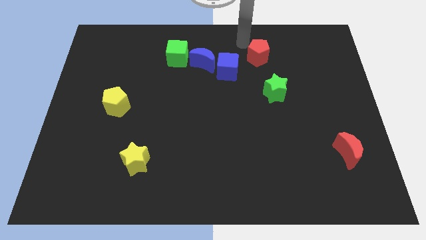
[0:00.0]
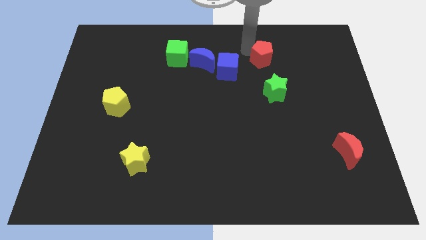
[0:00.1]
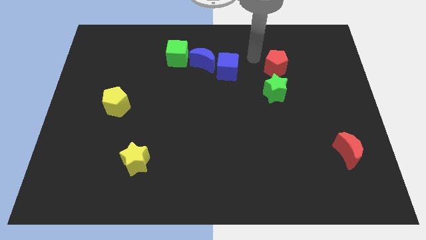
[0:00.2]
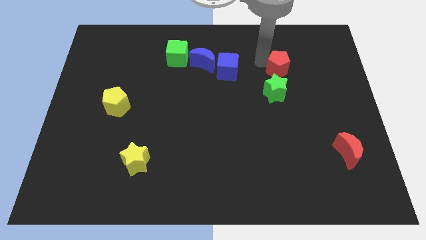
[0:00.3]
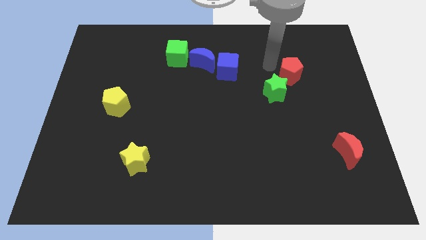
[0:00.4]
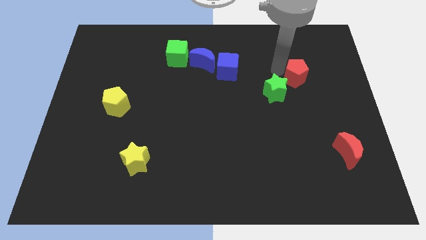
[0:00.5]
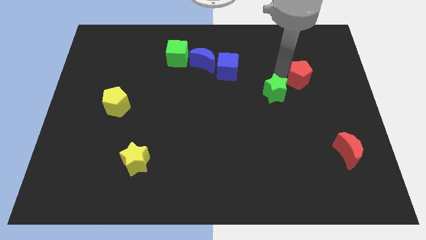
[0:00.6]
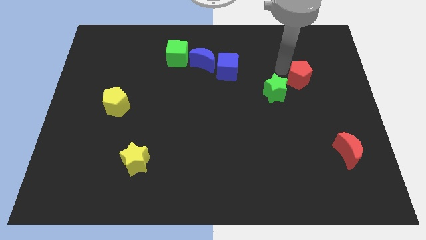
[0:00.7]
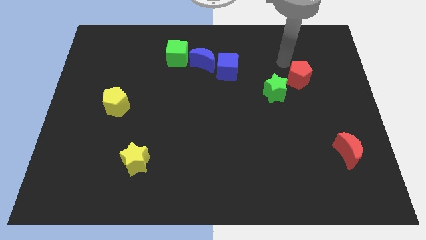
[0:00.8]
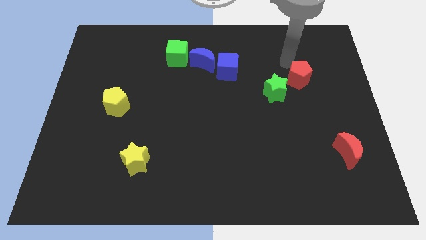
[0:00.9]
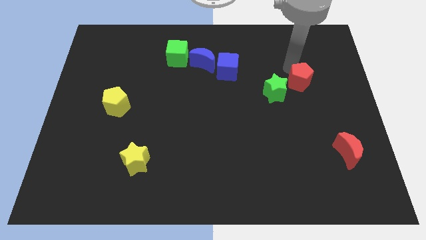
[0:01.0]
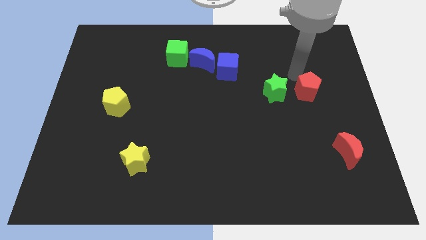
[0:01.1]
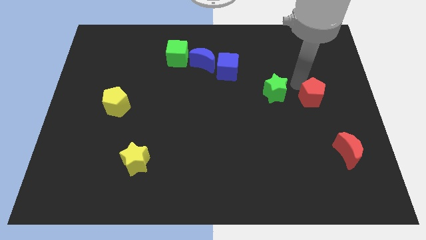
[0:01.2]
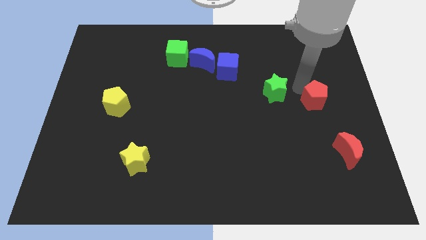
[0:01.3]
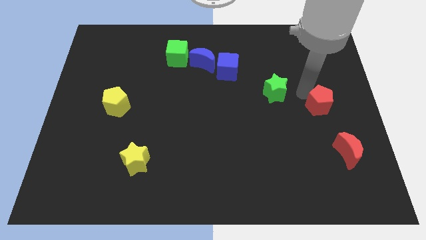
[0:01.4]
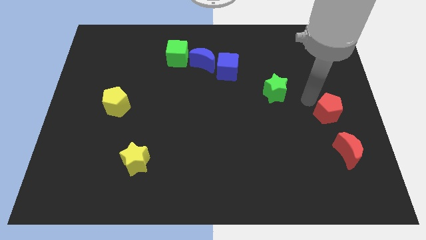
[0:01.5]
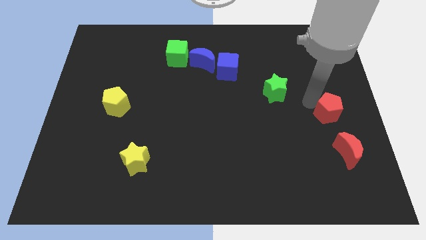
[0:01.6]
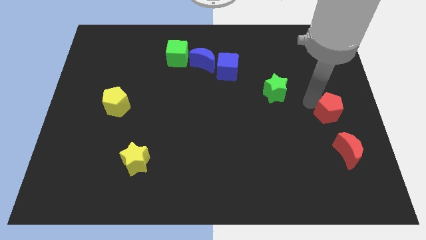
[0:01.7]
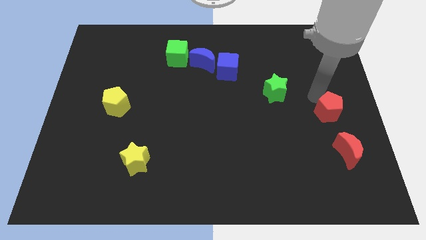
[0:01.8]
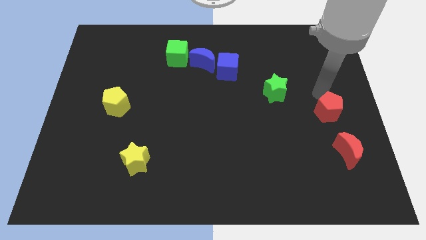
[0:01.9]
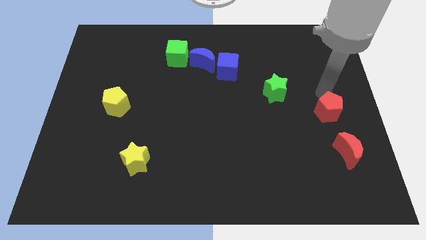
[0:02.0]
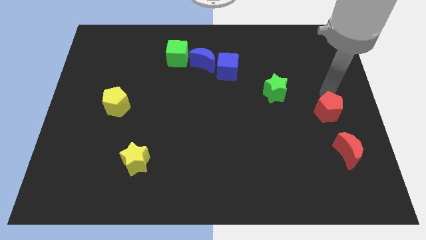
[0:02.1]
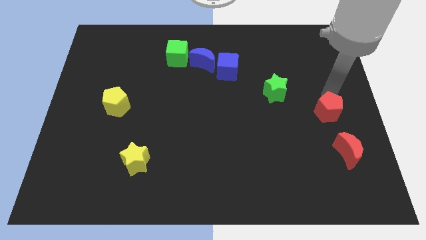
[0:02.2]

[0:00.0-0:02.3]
push the red pentagon towards the red crescent

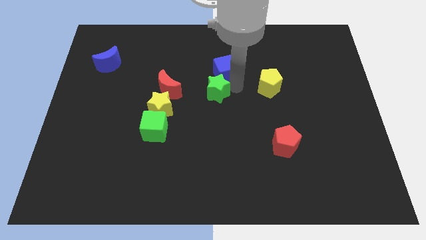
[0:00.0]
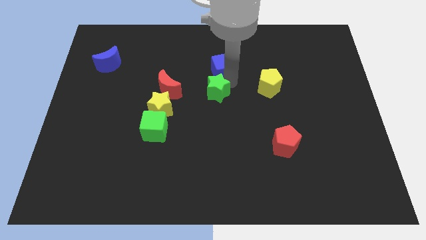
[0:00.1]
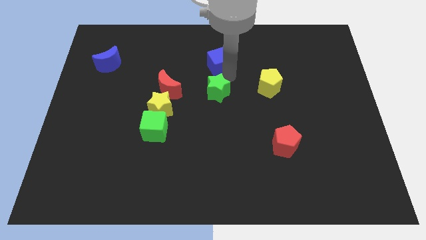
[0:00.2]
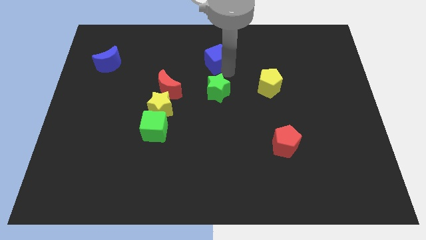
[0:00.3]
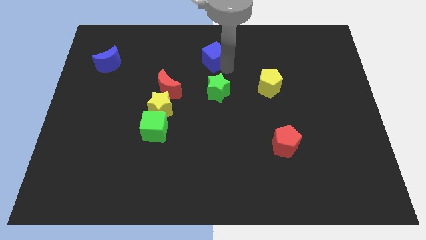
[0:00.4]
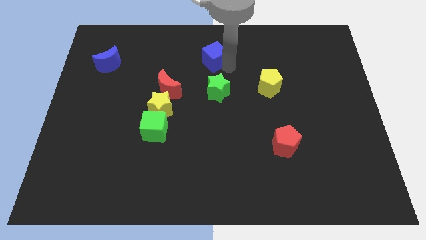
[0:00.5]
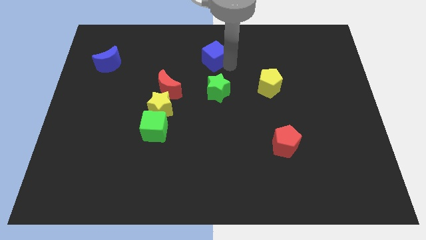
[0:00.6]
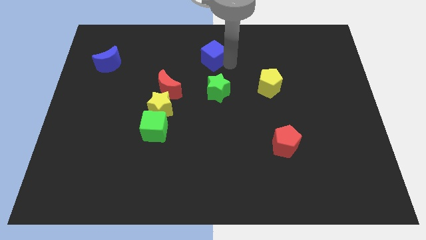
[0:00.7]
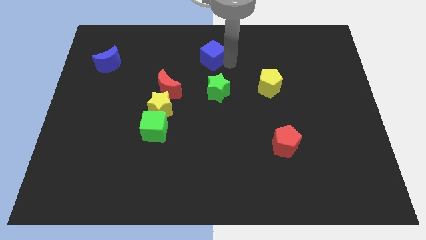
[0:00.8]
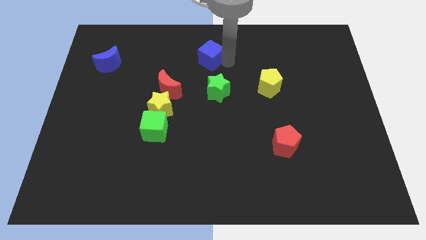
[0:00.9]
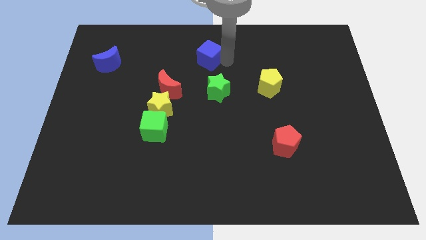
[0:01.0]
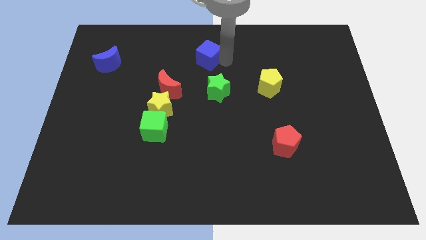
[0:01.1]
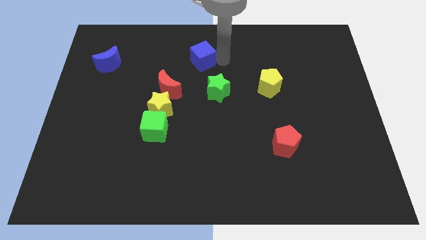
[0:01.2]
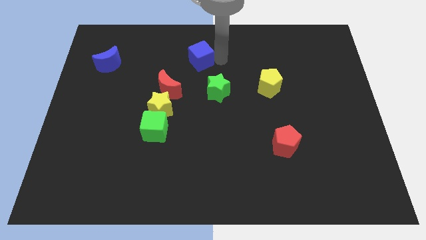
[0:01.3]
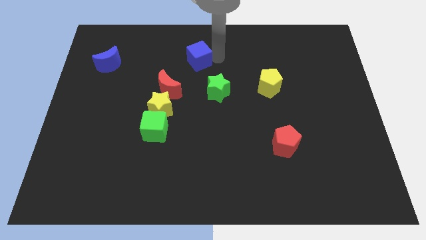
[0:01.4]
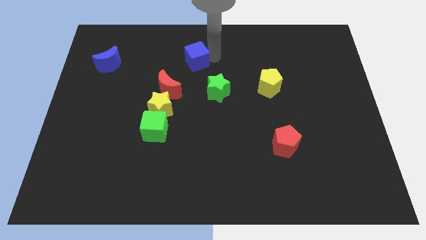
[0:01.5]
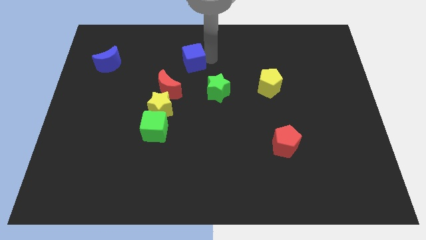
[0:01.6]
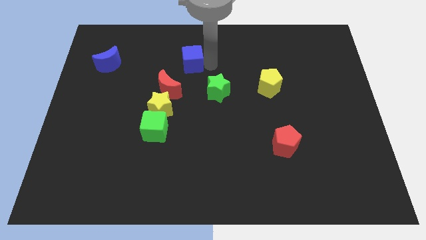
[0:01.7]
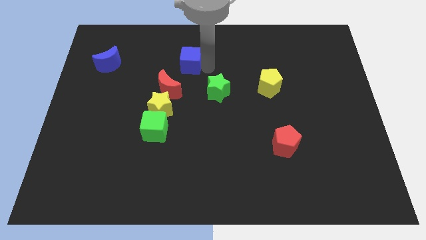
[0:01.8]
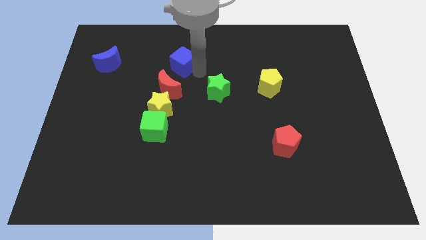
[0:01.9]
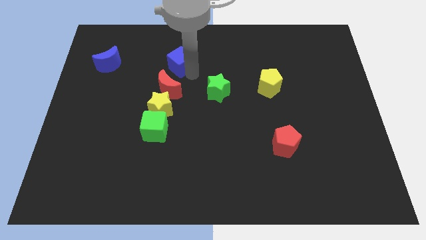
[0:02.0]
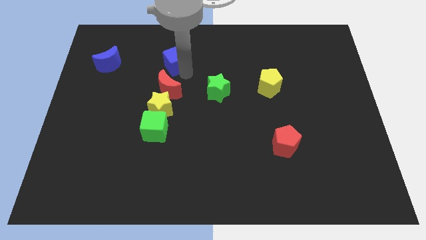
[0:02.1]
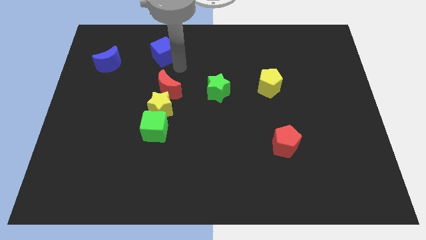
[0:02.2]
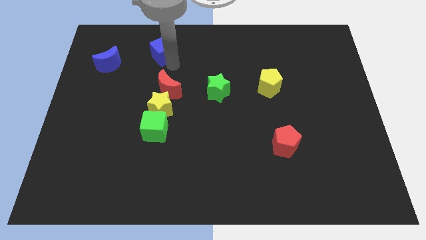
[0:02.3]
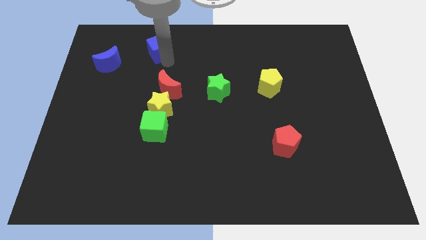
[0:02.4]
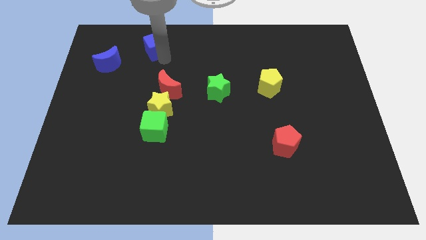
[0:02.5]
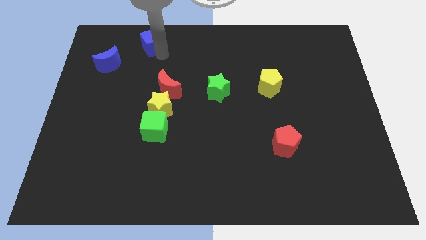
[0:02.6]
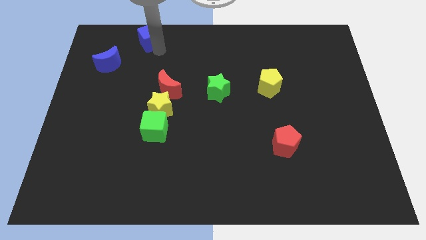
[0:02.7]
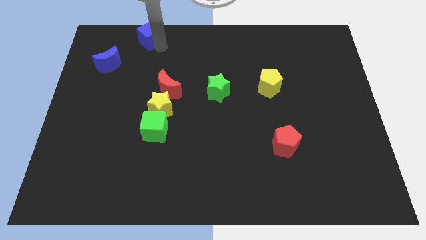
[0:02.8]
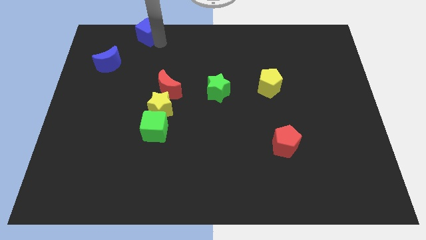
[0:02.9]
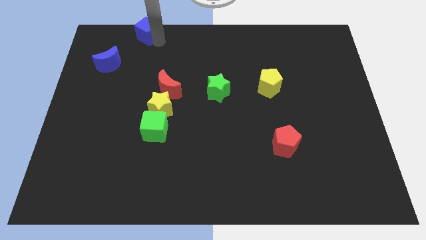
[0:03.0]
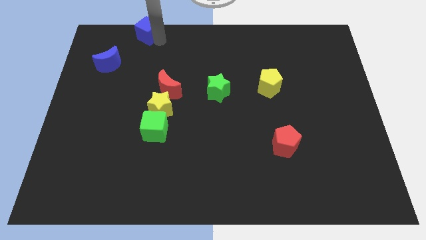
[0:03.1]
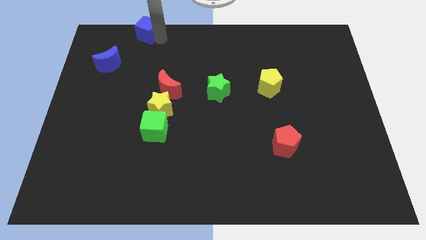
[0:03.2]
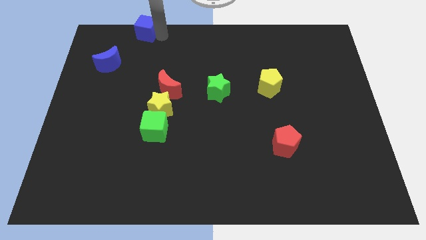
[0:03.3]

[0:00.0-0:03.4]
place the blue cube at the top right of the blue crescent

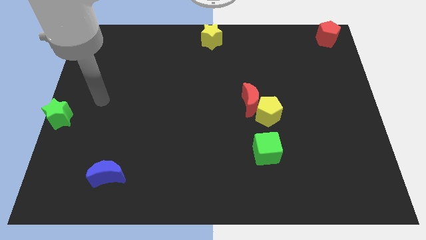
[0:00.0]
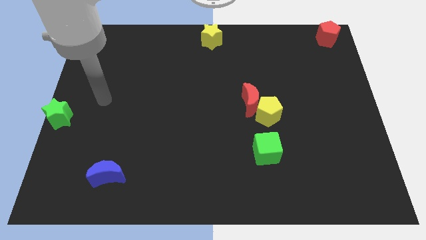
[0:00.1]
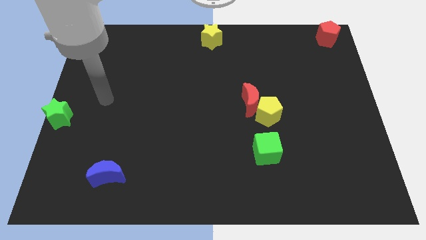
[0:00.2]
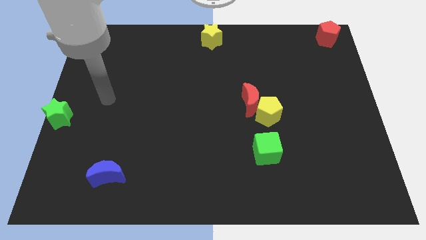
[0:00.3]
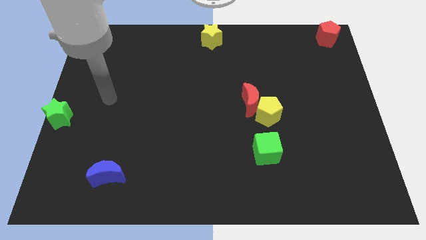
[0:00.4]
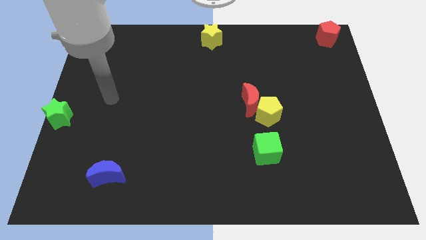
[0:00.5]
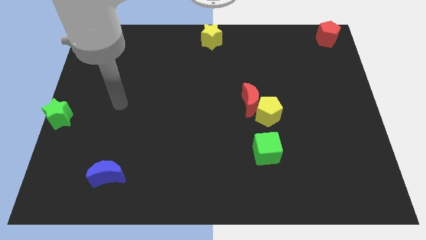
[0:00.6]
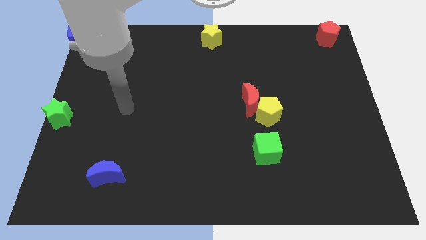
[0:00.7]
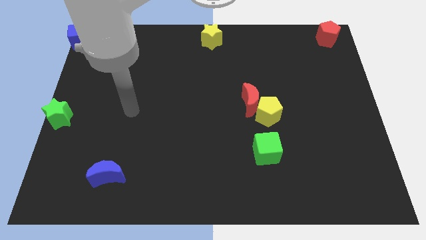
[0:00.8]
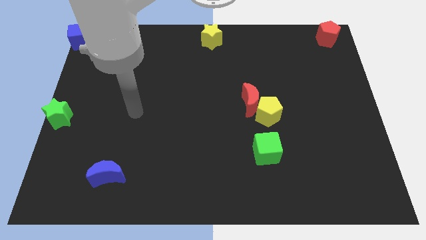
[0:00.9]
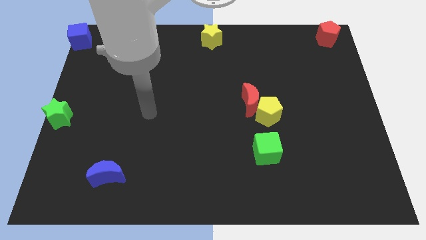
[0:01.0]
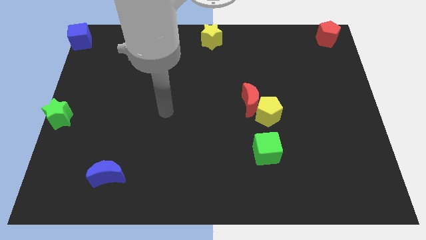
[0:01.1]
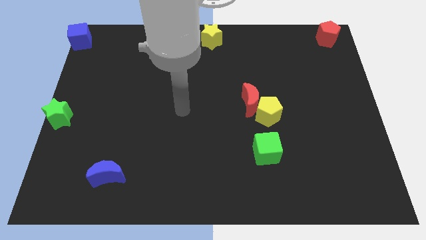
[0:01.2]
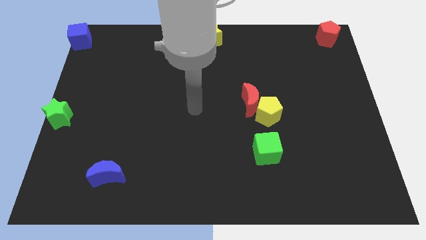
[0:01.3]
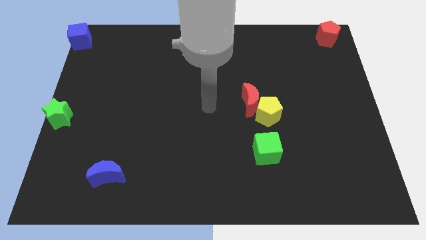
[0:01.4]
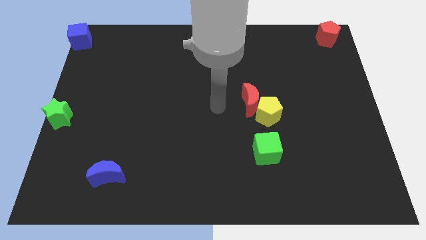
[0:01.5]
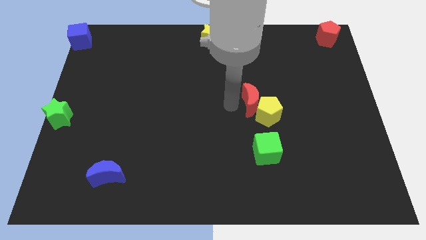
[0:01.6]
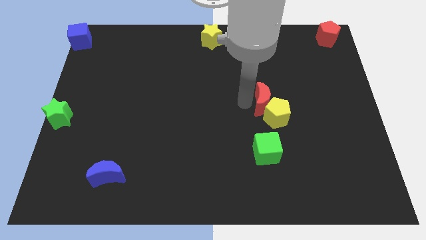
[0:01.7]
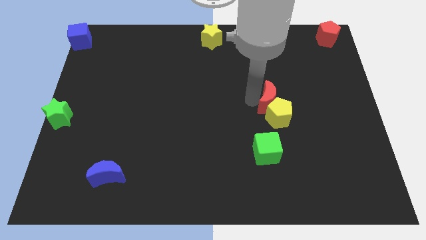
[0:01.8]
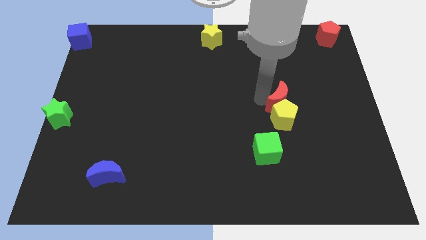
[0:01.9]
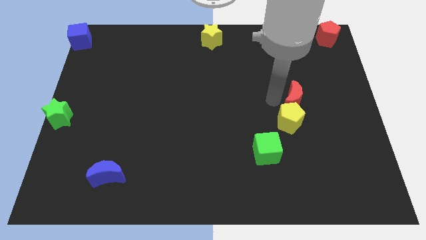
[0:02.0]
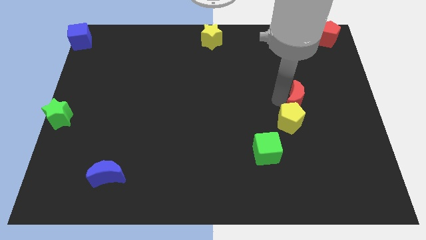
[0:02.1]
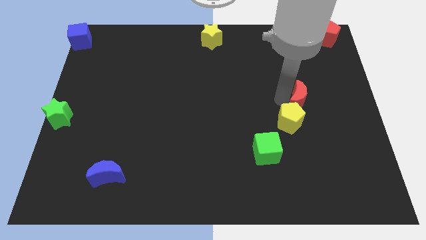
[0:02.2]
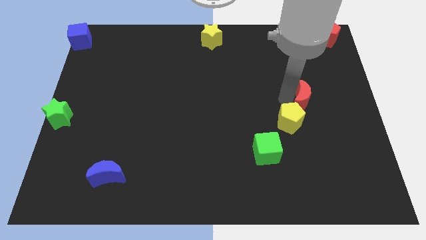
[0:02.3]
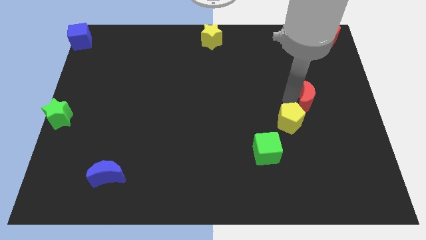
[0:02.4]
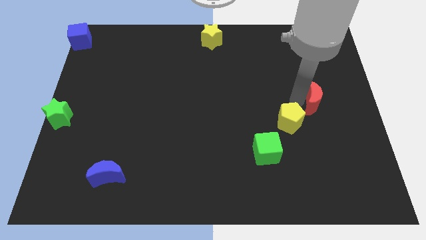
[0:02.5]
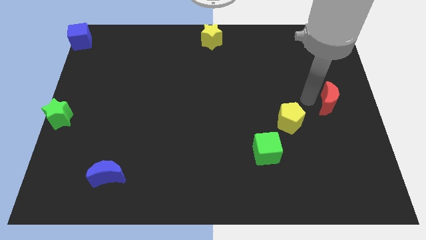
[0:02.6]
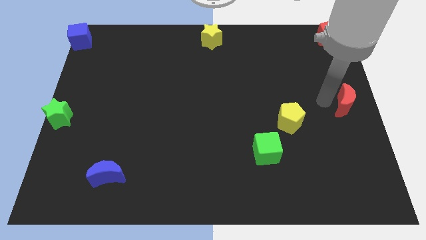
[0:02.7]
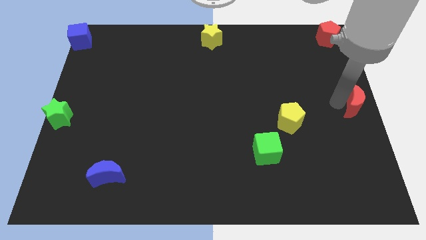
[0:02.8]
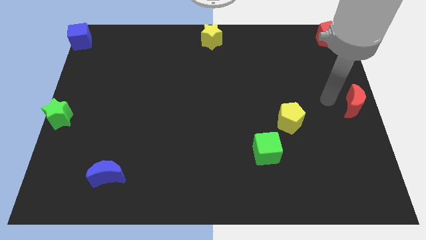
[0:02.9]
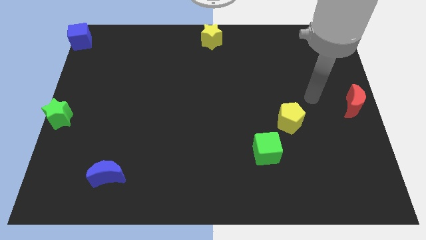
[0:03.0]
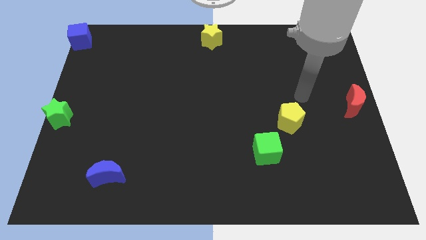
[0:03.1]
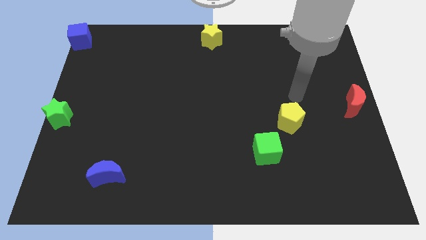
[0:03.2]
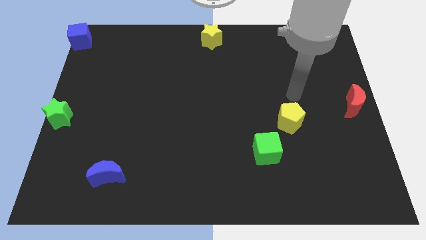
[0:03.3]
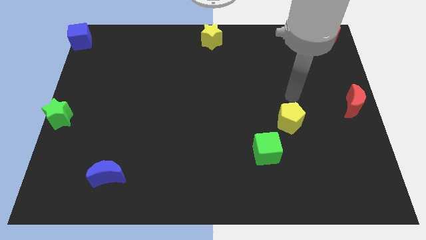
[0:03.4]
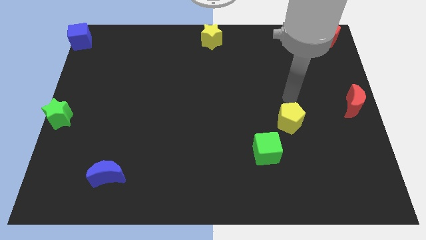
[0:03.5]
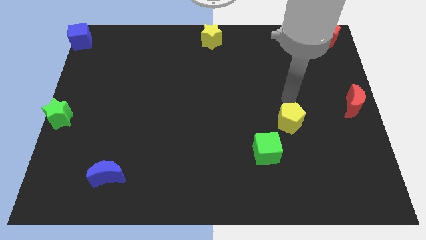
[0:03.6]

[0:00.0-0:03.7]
move red crescent to the right centre of the board
